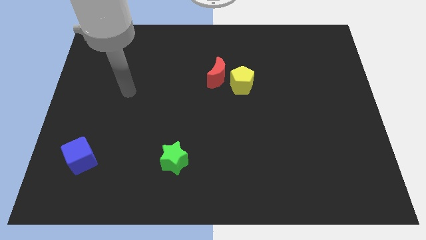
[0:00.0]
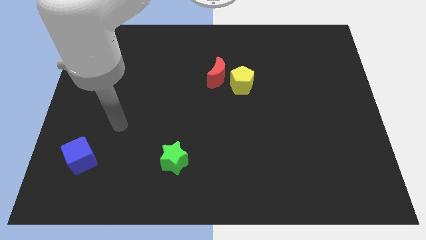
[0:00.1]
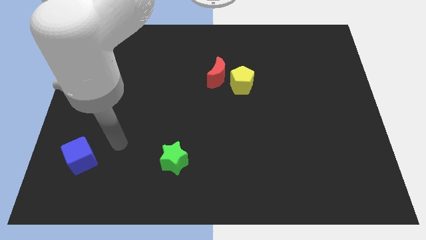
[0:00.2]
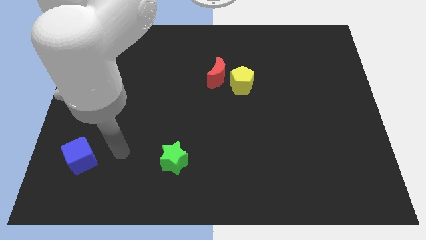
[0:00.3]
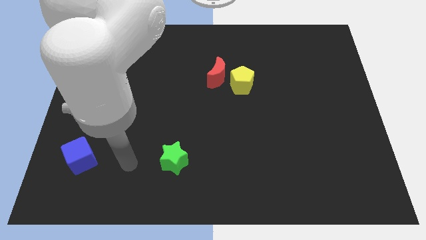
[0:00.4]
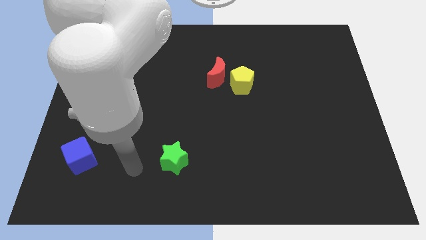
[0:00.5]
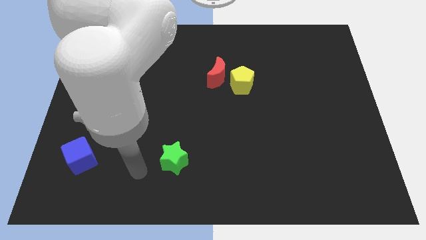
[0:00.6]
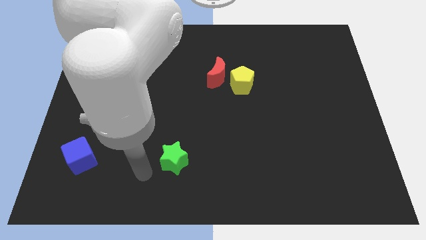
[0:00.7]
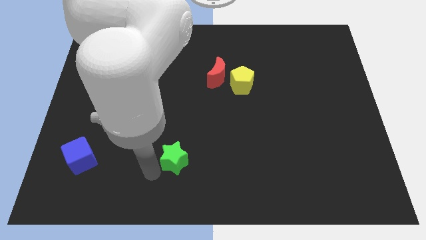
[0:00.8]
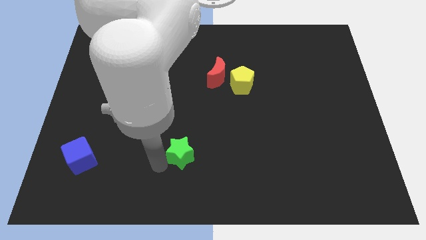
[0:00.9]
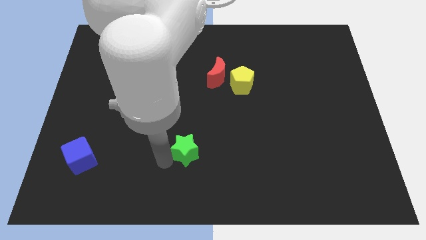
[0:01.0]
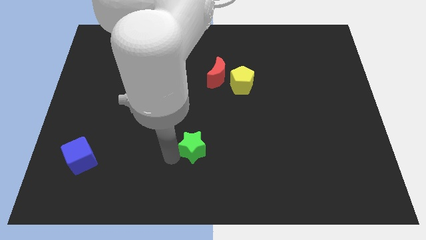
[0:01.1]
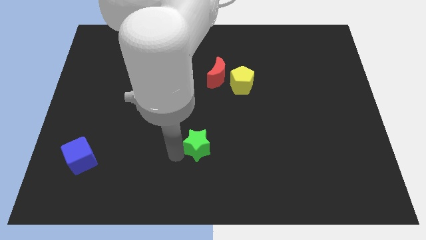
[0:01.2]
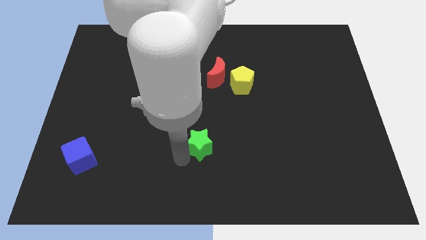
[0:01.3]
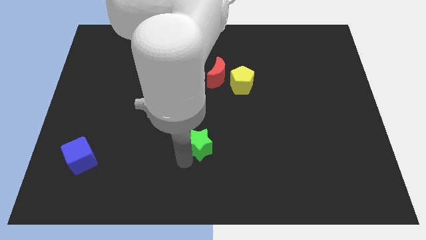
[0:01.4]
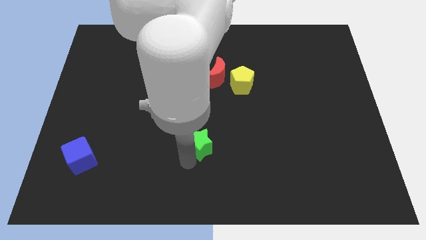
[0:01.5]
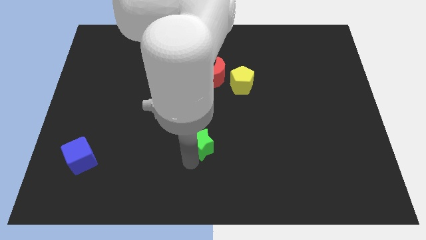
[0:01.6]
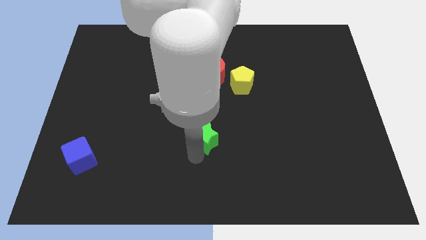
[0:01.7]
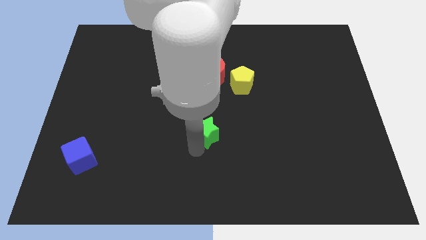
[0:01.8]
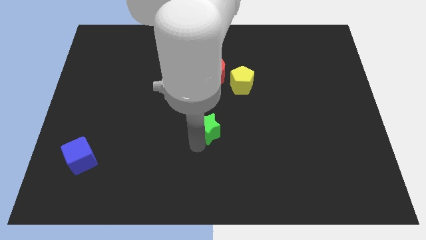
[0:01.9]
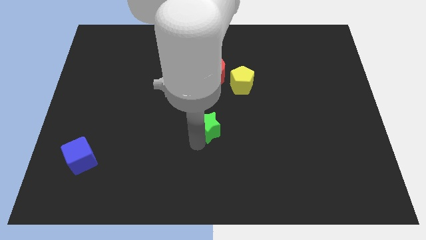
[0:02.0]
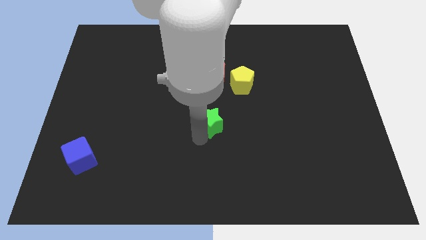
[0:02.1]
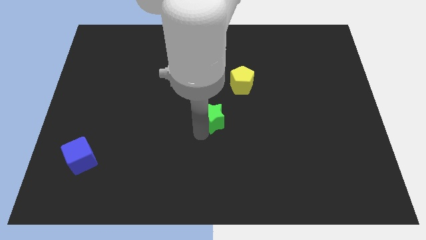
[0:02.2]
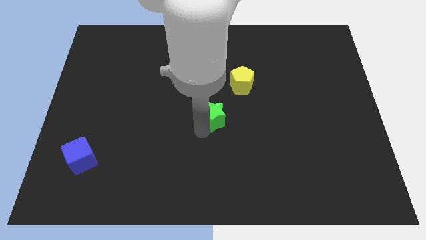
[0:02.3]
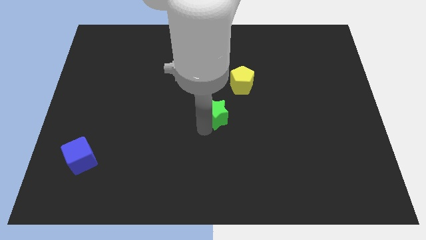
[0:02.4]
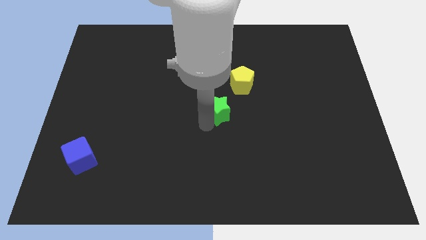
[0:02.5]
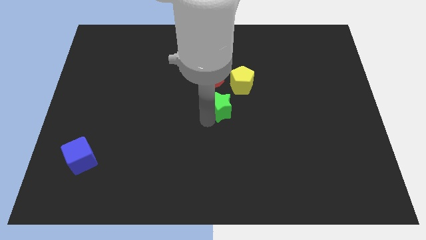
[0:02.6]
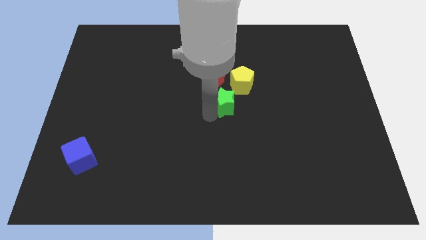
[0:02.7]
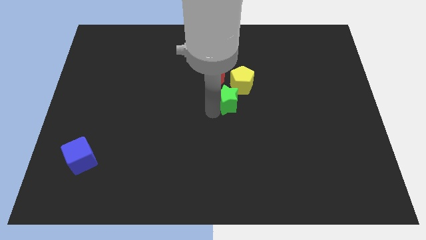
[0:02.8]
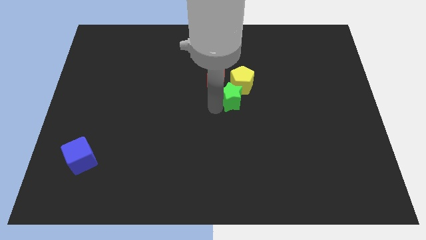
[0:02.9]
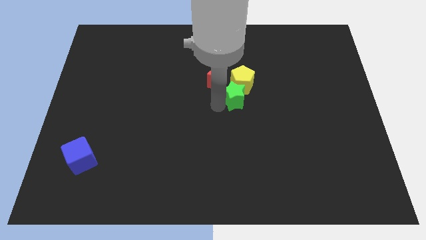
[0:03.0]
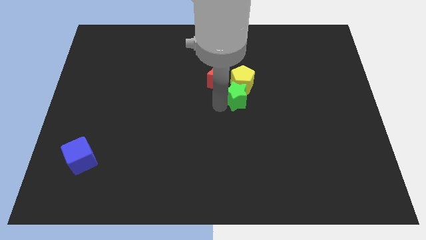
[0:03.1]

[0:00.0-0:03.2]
slide the green block to the yellow pentagon

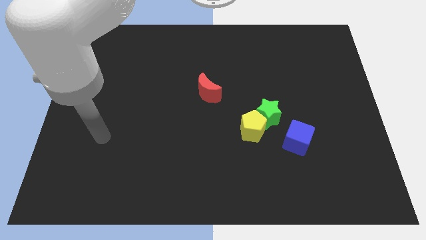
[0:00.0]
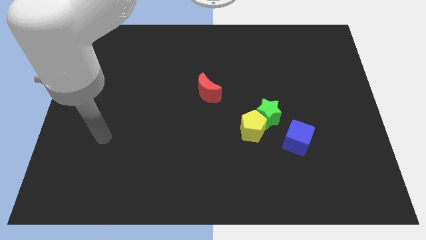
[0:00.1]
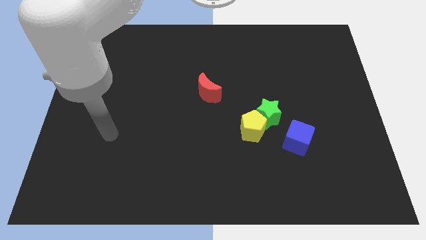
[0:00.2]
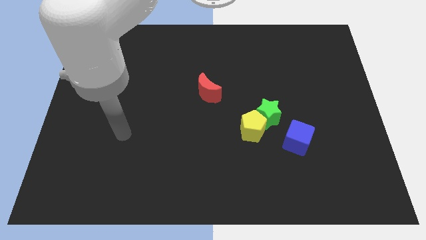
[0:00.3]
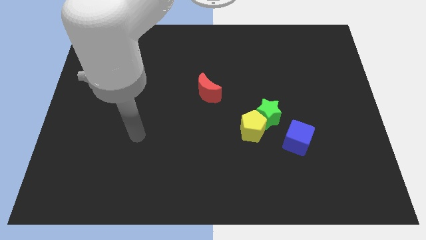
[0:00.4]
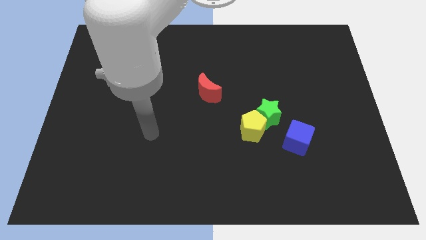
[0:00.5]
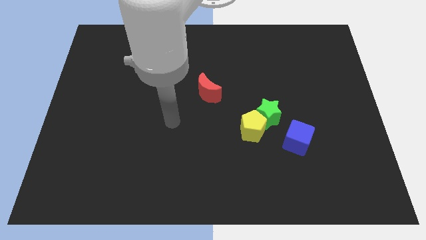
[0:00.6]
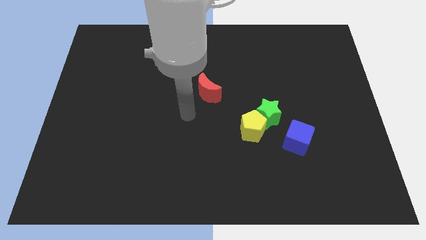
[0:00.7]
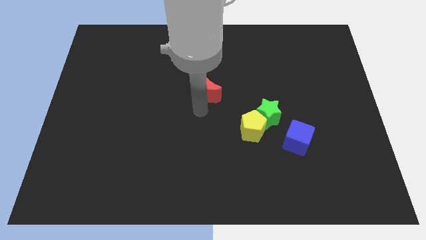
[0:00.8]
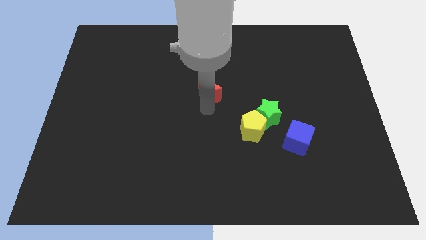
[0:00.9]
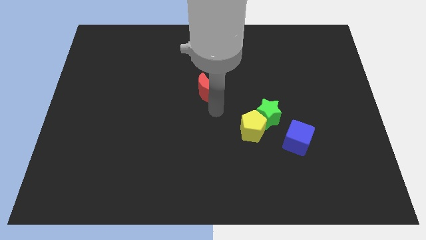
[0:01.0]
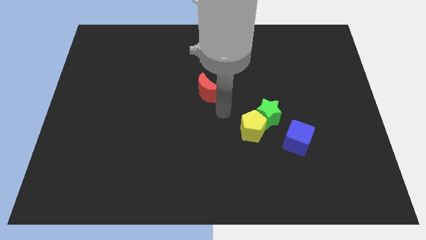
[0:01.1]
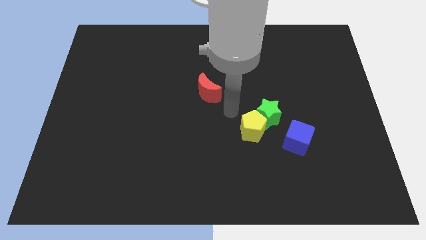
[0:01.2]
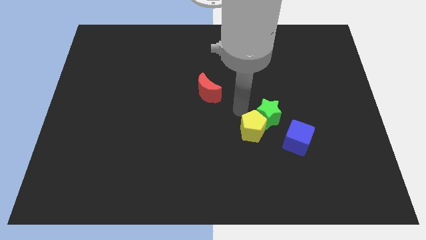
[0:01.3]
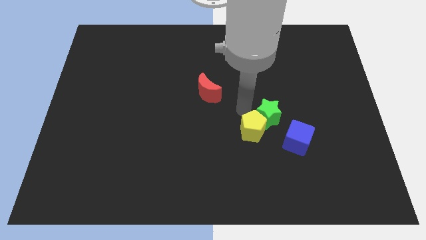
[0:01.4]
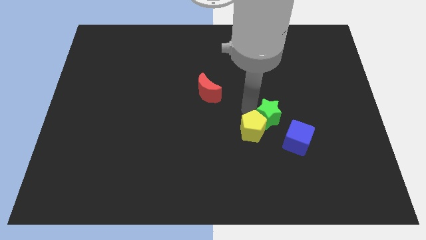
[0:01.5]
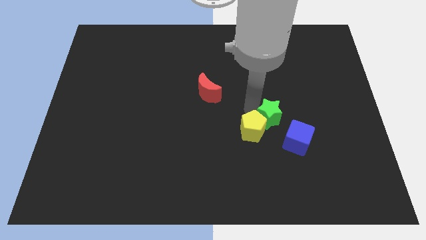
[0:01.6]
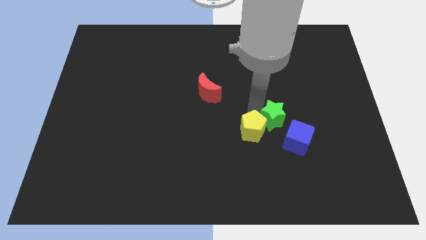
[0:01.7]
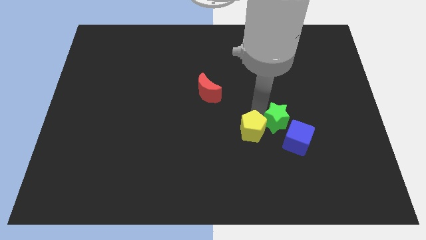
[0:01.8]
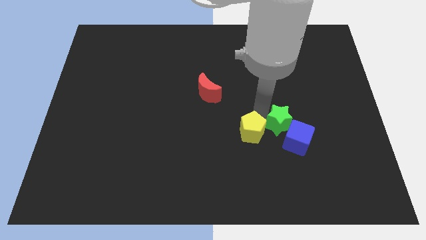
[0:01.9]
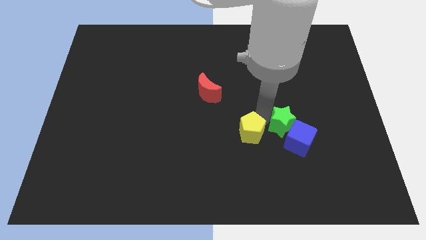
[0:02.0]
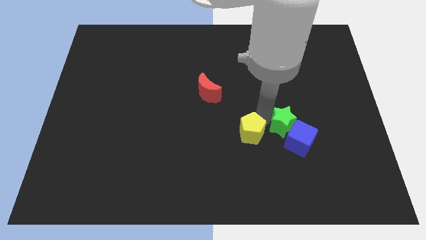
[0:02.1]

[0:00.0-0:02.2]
move the green star close to the cube

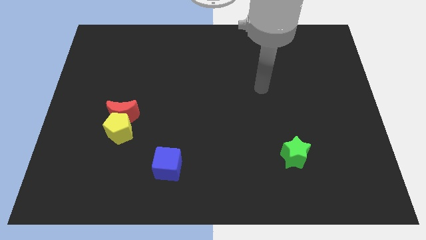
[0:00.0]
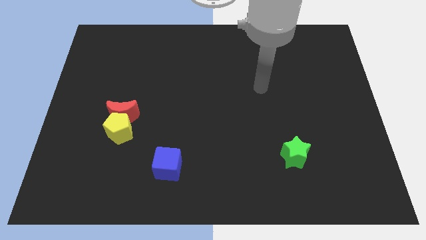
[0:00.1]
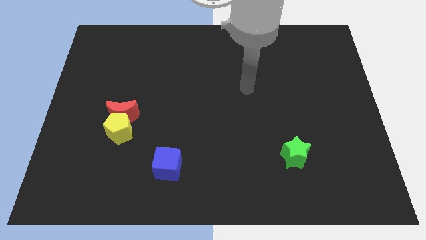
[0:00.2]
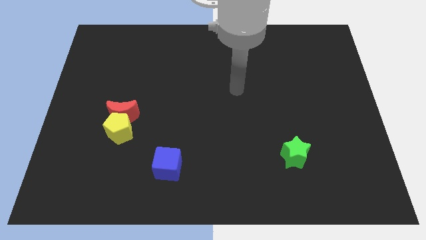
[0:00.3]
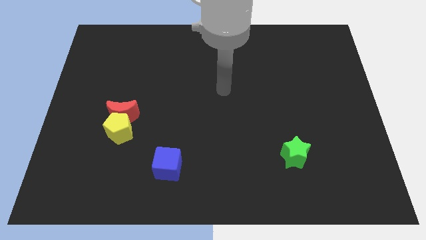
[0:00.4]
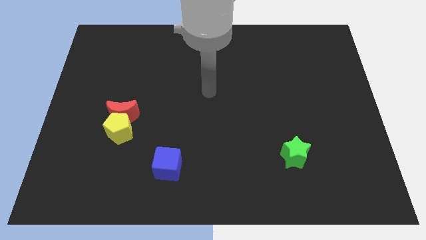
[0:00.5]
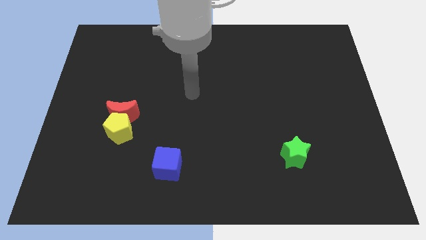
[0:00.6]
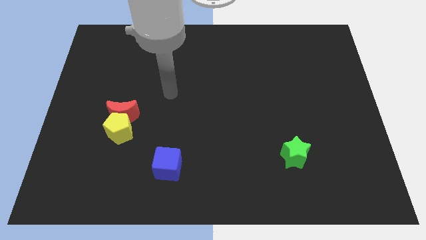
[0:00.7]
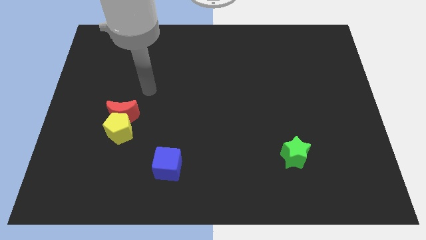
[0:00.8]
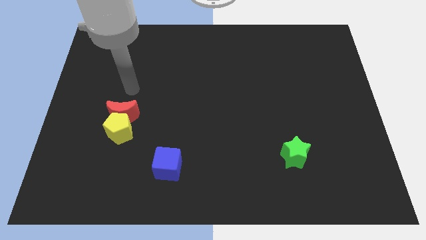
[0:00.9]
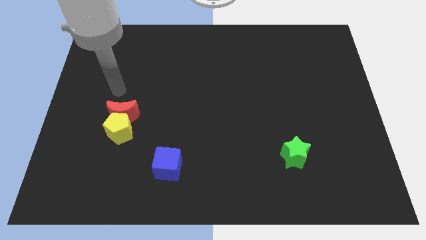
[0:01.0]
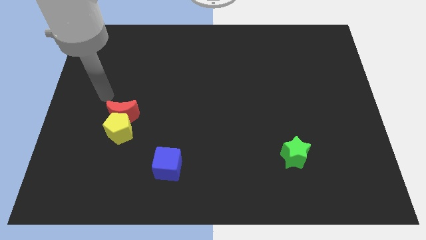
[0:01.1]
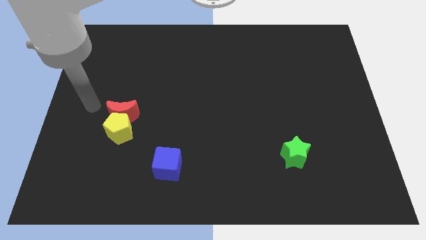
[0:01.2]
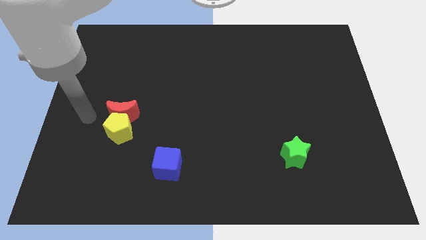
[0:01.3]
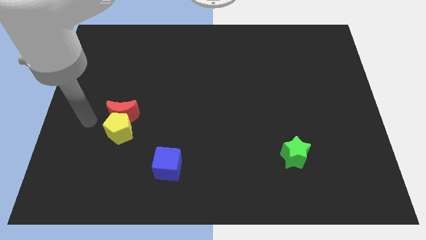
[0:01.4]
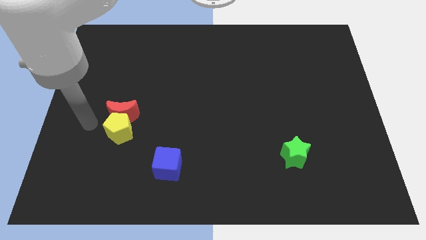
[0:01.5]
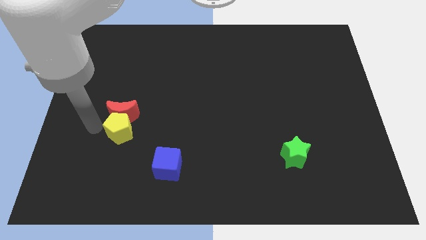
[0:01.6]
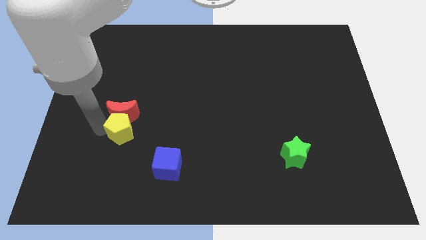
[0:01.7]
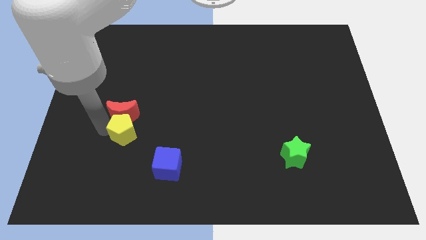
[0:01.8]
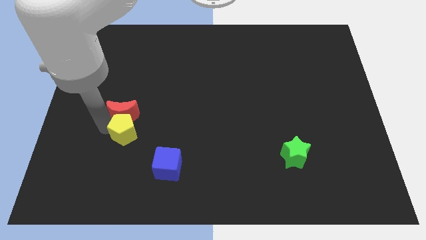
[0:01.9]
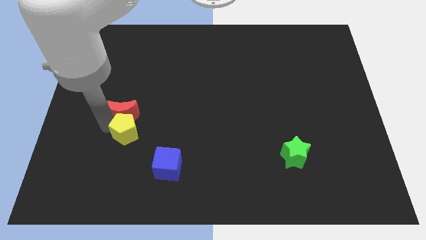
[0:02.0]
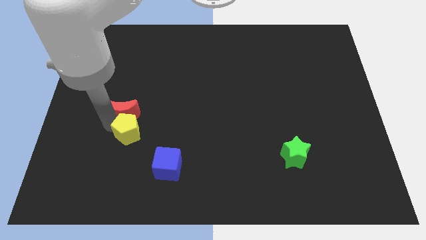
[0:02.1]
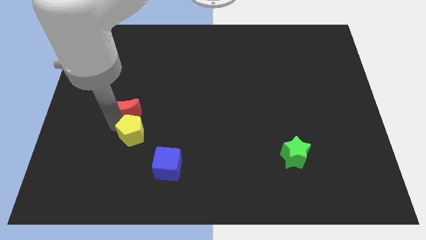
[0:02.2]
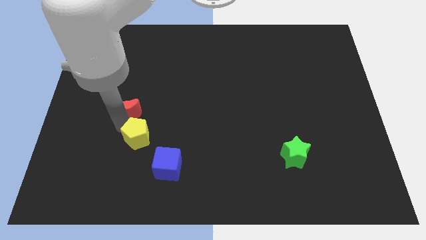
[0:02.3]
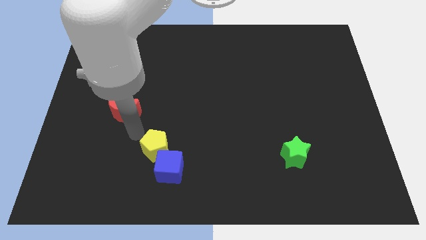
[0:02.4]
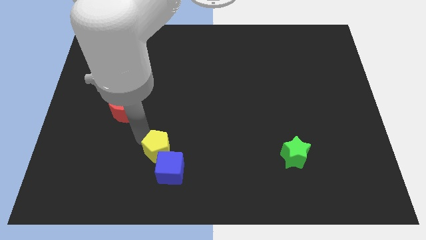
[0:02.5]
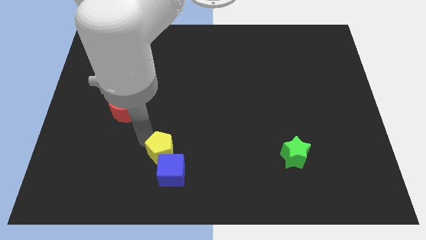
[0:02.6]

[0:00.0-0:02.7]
slide the yellow pentagon close to the blue cube

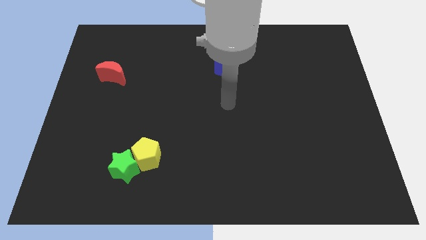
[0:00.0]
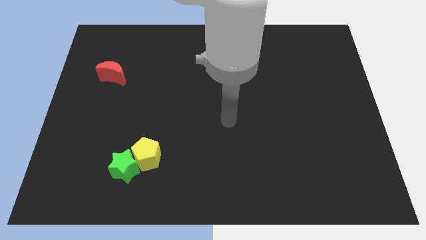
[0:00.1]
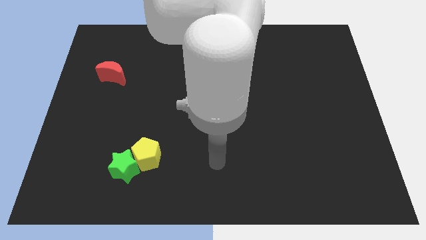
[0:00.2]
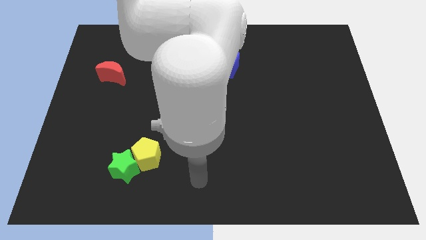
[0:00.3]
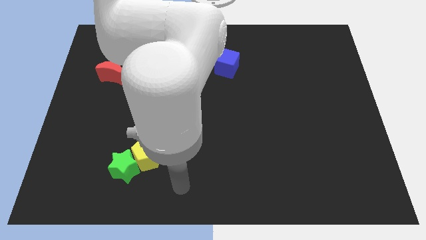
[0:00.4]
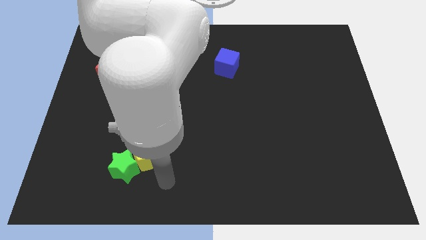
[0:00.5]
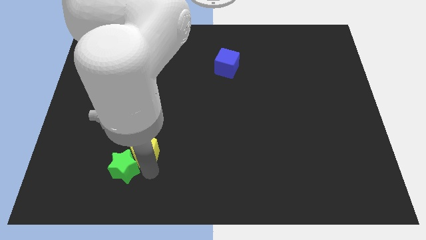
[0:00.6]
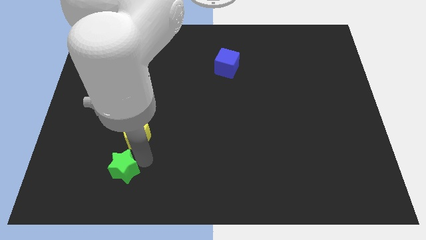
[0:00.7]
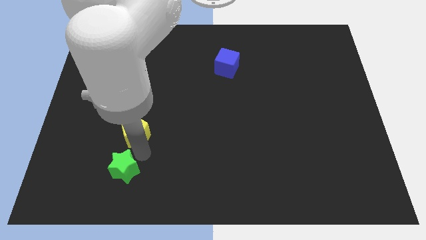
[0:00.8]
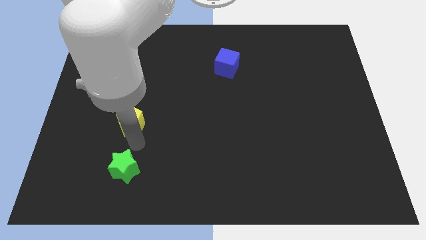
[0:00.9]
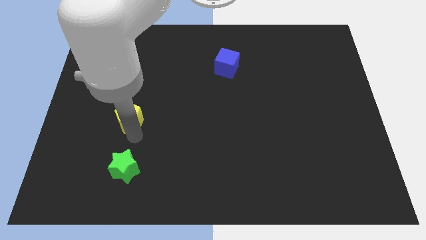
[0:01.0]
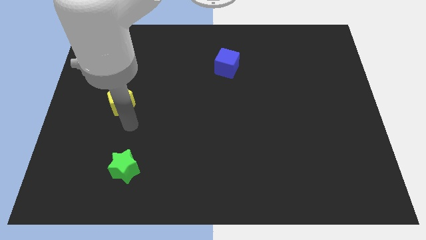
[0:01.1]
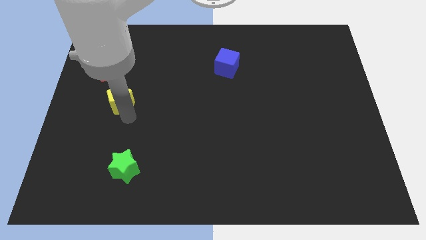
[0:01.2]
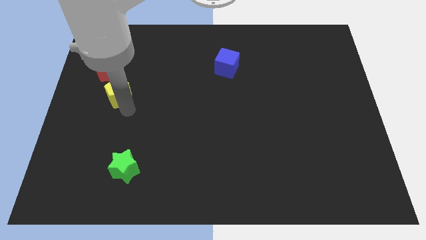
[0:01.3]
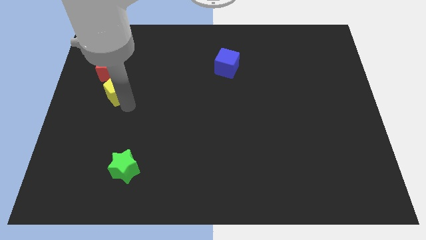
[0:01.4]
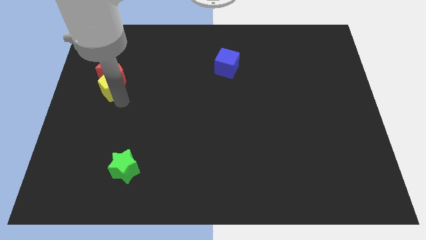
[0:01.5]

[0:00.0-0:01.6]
move the yellow pentagon next to the red block
